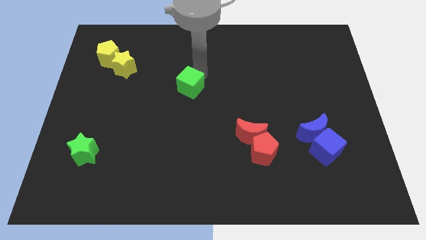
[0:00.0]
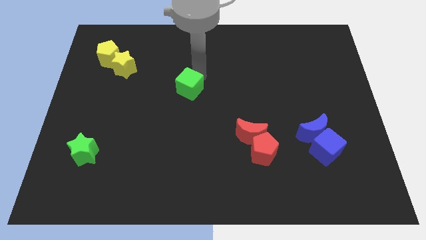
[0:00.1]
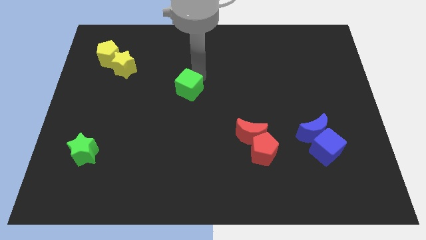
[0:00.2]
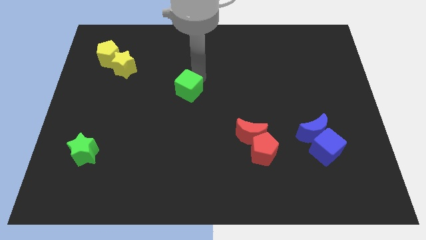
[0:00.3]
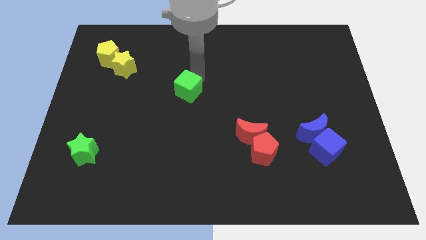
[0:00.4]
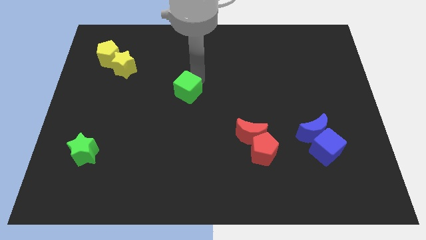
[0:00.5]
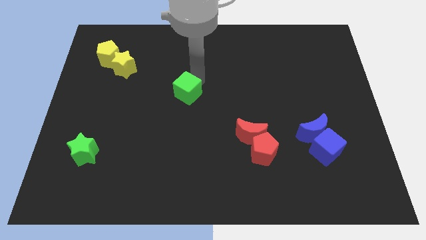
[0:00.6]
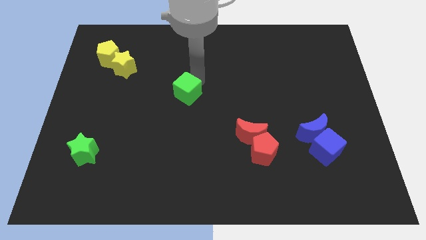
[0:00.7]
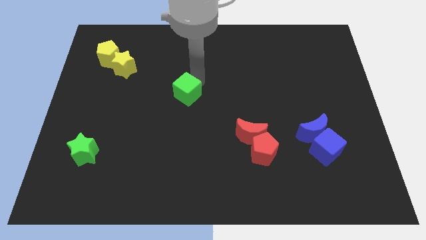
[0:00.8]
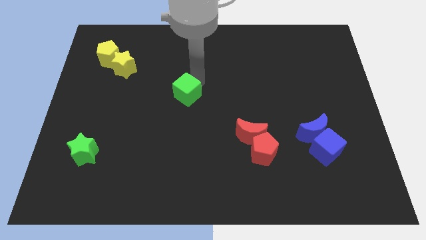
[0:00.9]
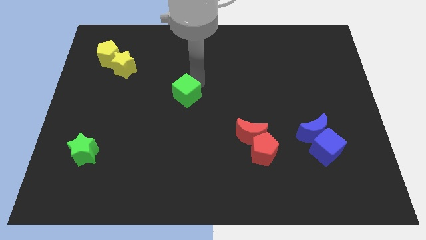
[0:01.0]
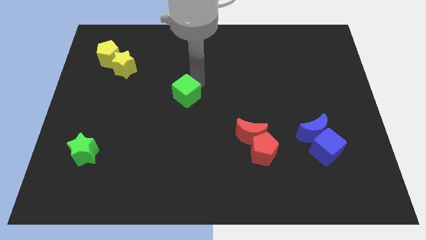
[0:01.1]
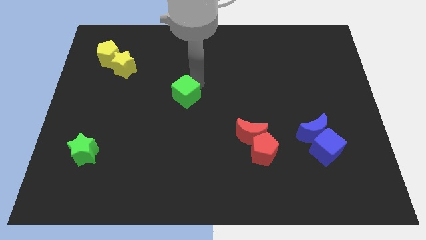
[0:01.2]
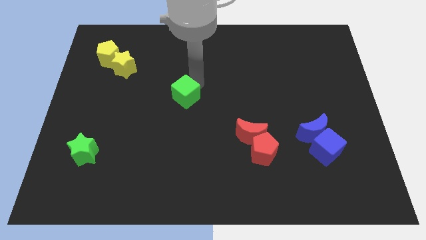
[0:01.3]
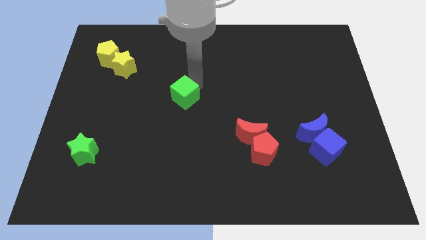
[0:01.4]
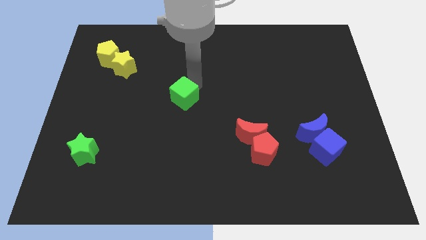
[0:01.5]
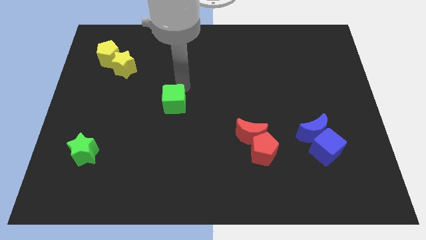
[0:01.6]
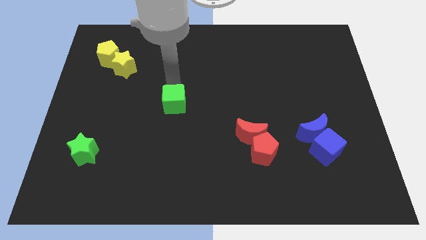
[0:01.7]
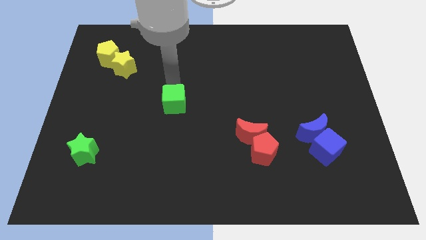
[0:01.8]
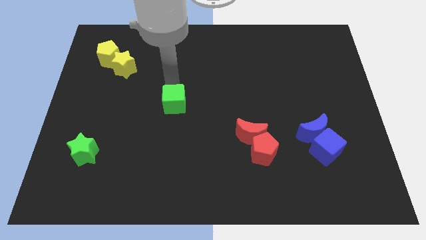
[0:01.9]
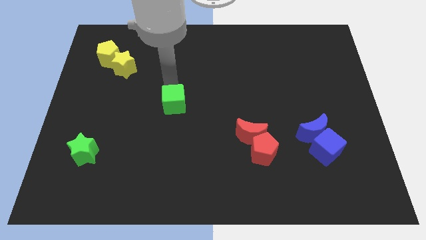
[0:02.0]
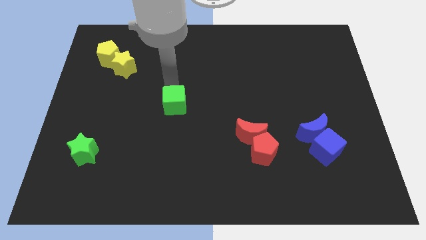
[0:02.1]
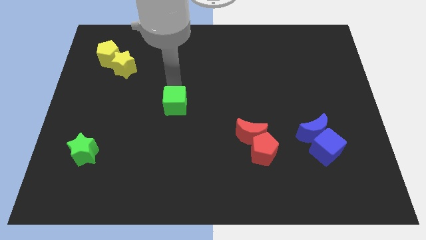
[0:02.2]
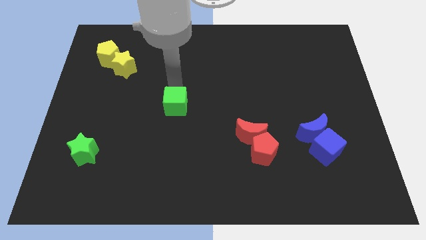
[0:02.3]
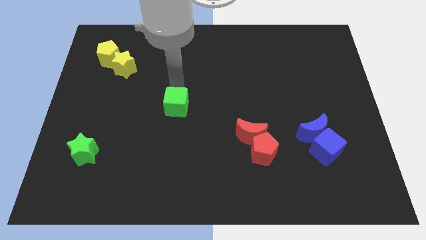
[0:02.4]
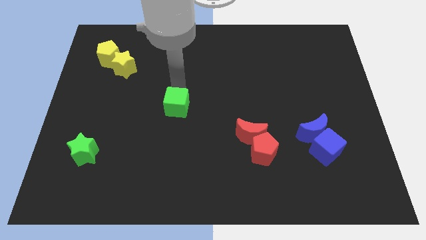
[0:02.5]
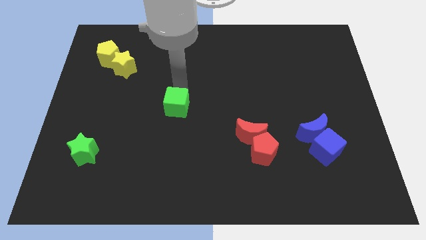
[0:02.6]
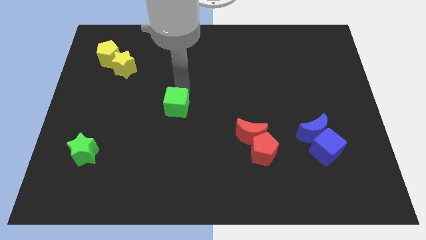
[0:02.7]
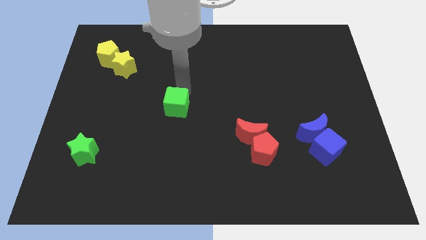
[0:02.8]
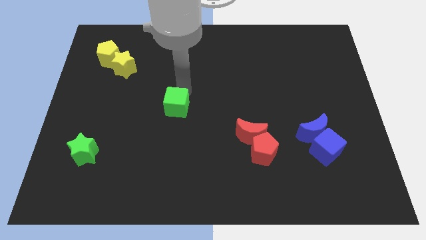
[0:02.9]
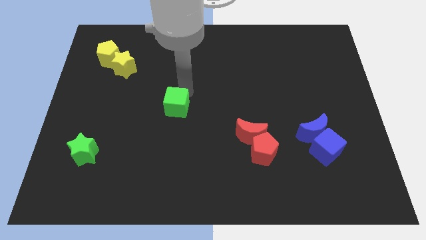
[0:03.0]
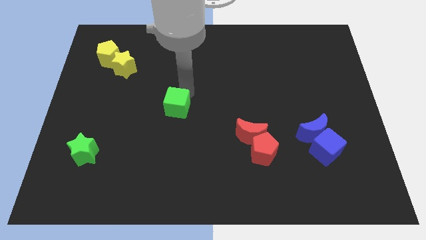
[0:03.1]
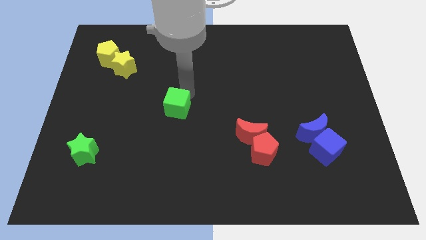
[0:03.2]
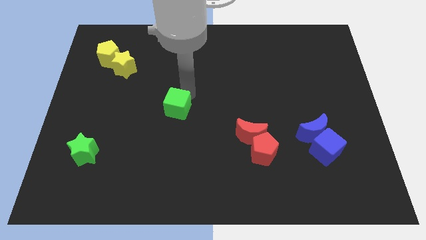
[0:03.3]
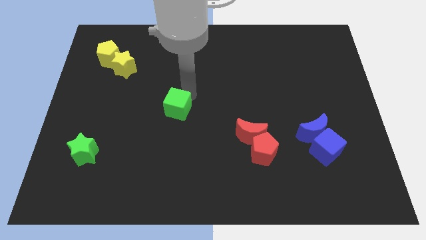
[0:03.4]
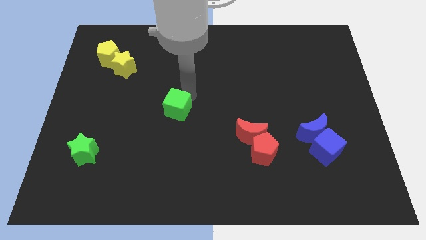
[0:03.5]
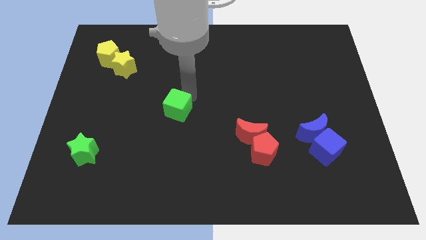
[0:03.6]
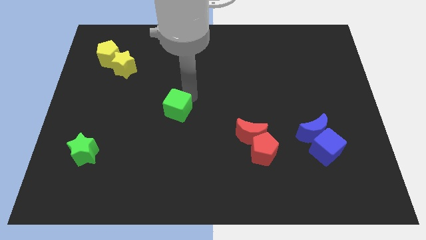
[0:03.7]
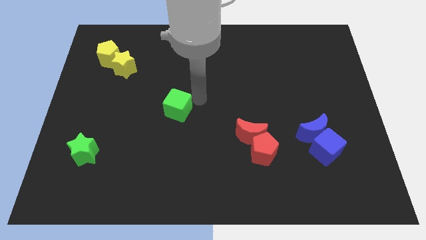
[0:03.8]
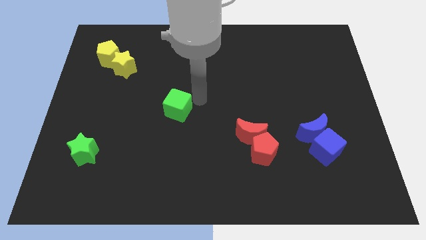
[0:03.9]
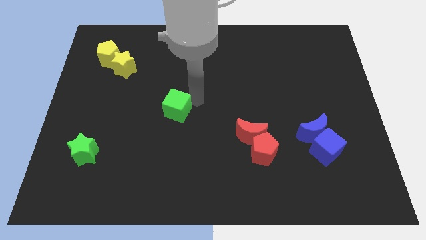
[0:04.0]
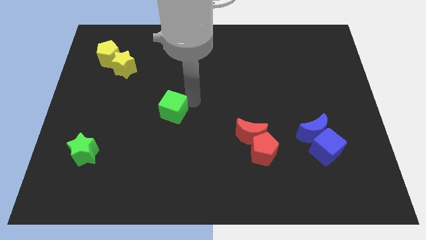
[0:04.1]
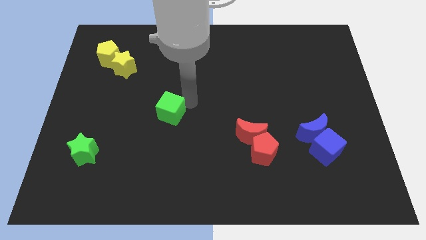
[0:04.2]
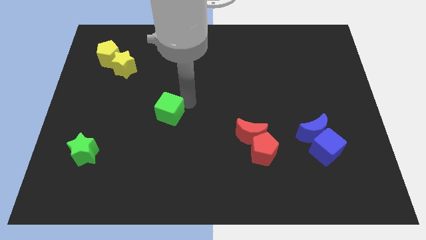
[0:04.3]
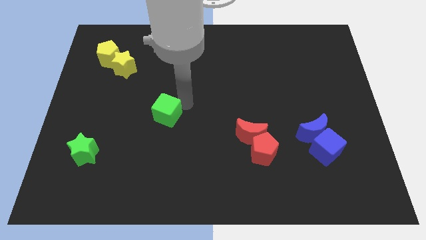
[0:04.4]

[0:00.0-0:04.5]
move the green cube towards the green star

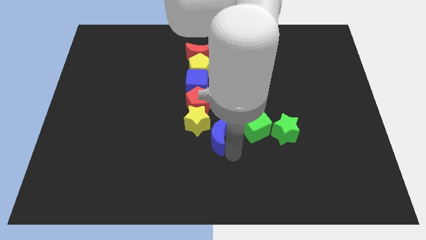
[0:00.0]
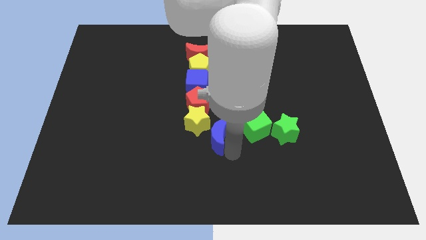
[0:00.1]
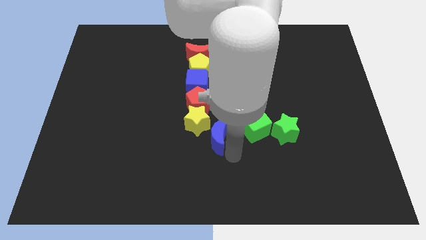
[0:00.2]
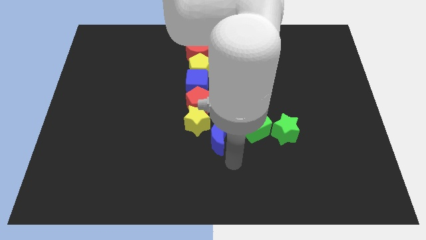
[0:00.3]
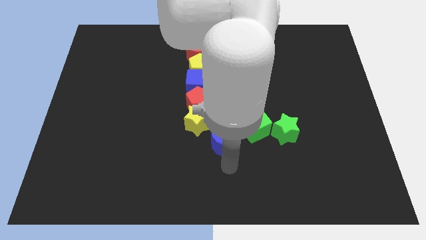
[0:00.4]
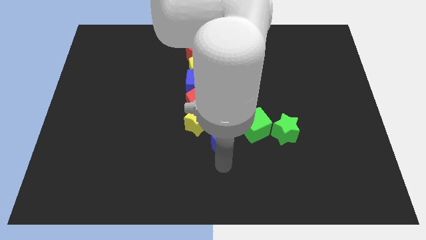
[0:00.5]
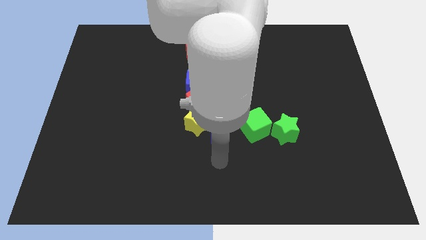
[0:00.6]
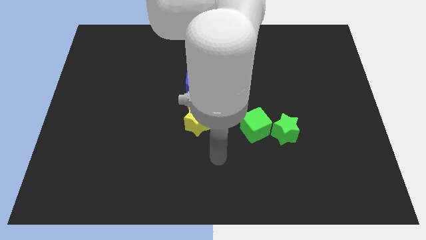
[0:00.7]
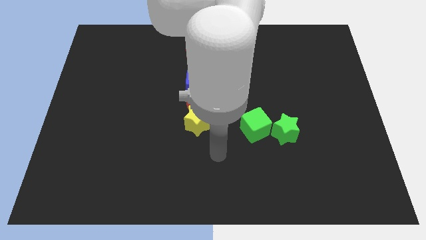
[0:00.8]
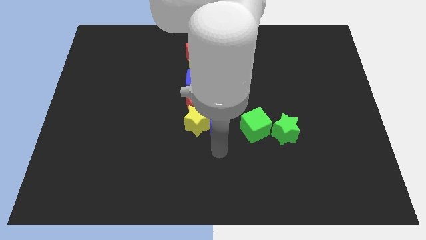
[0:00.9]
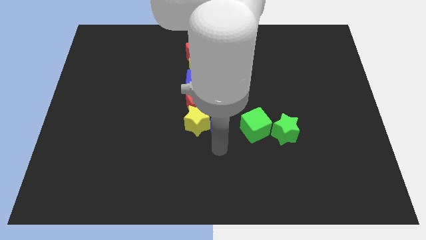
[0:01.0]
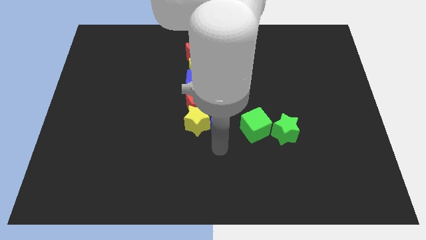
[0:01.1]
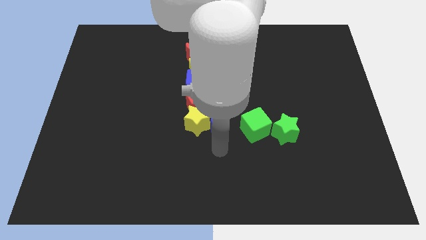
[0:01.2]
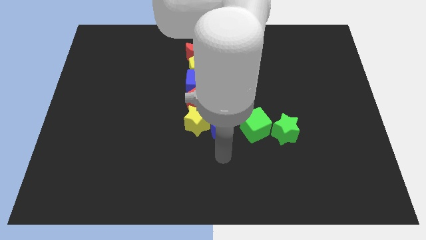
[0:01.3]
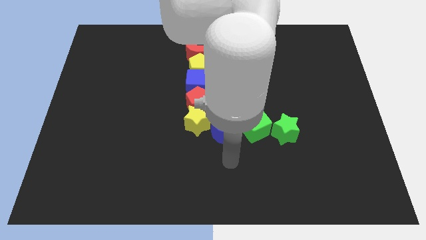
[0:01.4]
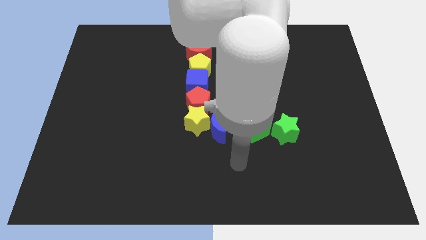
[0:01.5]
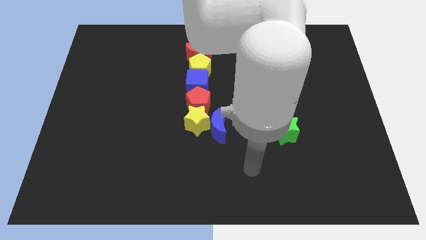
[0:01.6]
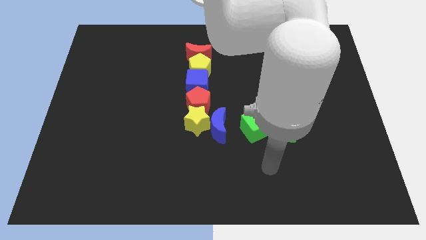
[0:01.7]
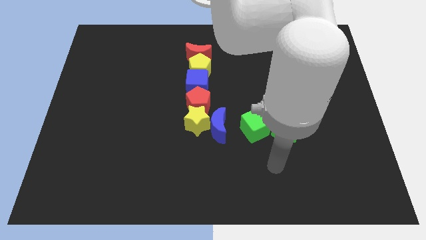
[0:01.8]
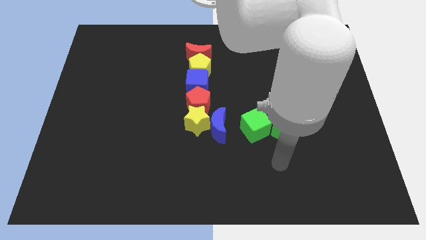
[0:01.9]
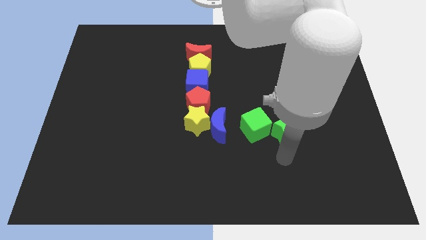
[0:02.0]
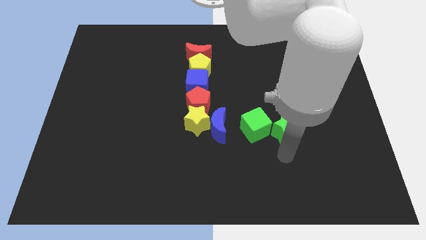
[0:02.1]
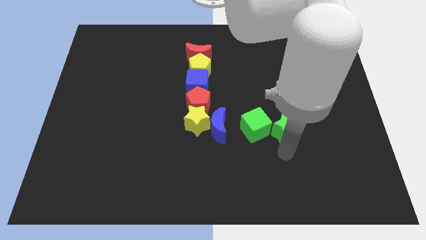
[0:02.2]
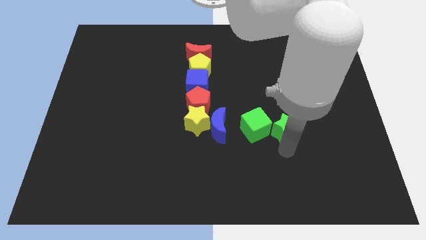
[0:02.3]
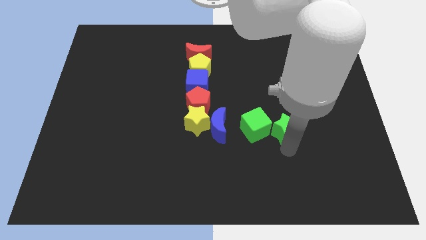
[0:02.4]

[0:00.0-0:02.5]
move the blue moon on the left side of the green blocks

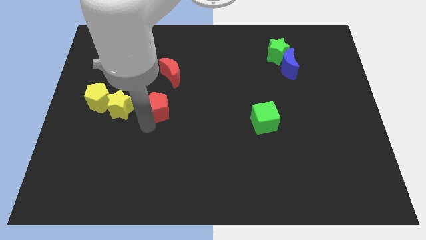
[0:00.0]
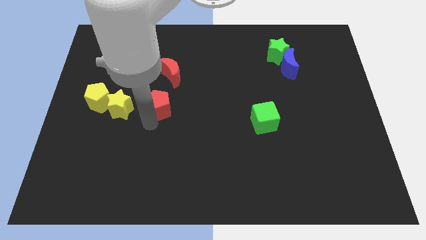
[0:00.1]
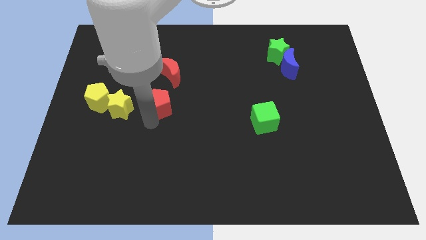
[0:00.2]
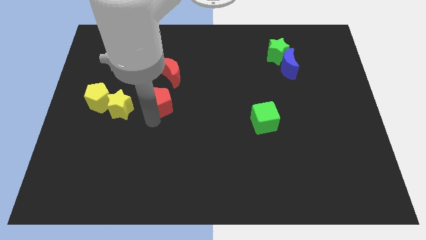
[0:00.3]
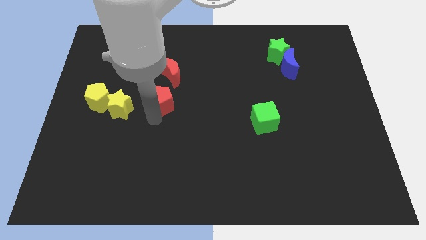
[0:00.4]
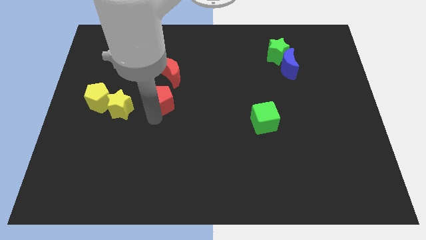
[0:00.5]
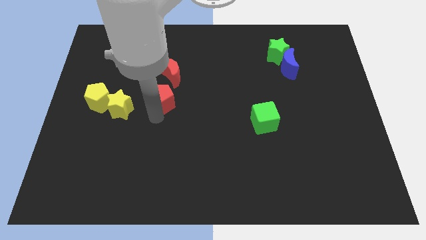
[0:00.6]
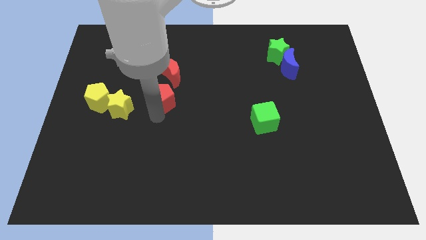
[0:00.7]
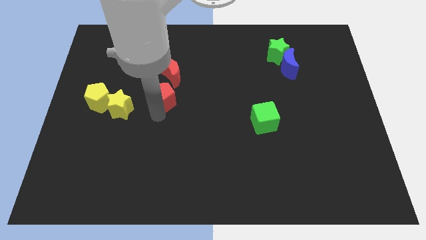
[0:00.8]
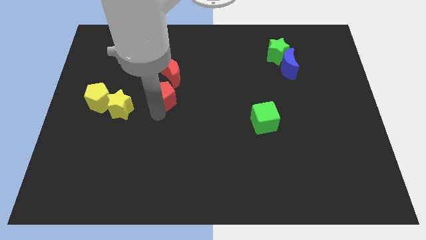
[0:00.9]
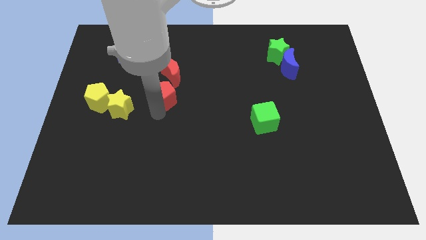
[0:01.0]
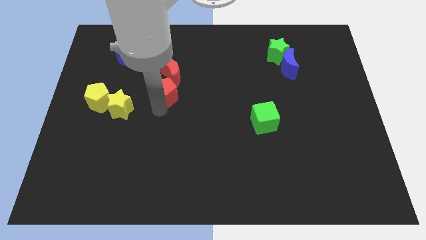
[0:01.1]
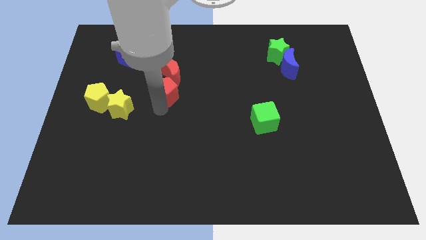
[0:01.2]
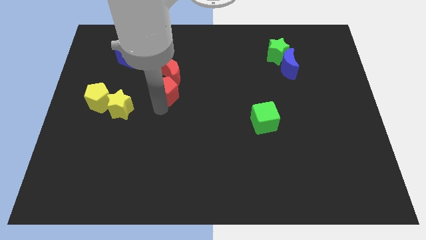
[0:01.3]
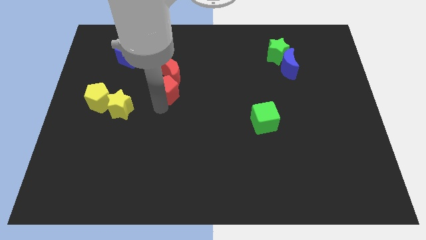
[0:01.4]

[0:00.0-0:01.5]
place red pentagon to the bottom of red moon

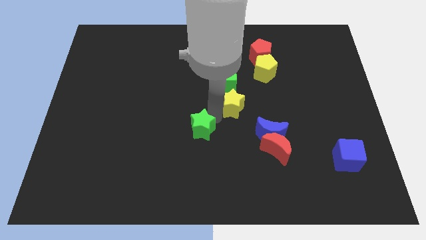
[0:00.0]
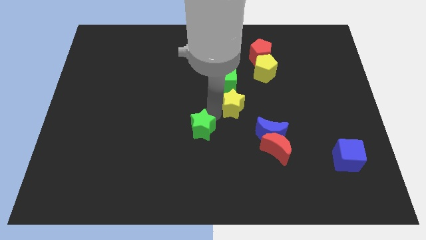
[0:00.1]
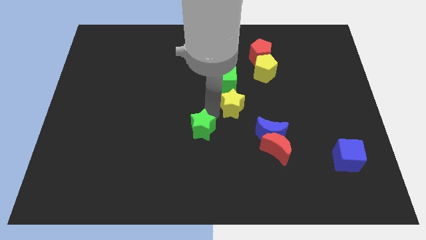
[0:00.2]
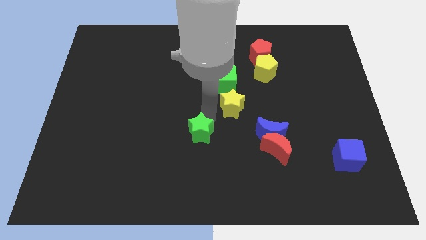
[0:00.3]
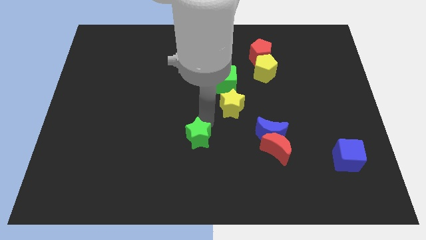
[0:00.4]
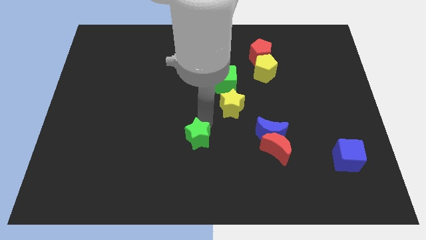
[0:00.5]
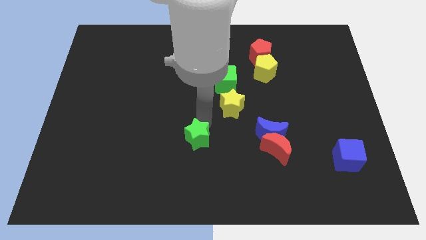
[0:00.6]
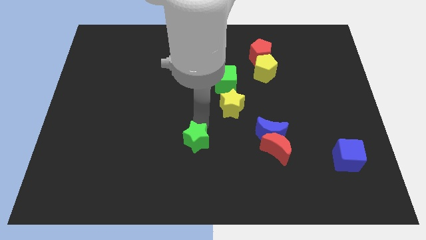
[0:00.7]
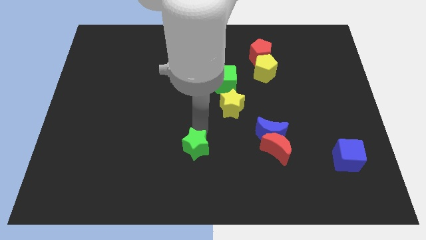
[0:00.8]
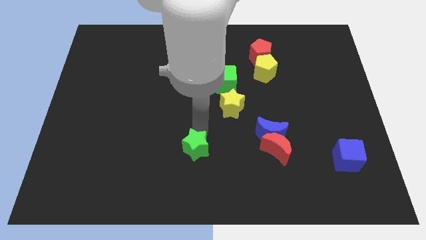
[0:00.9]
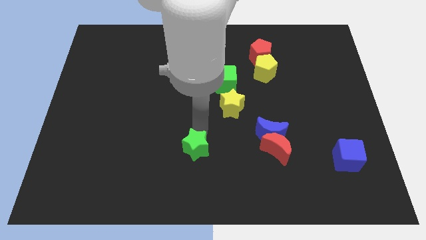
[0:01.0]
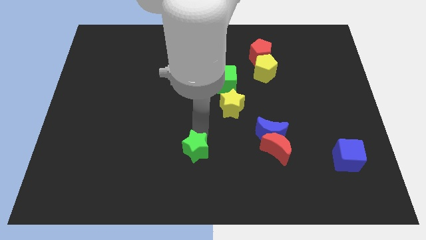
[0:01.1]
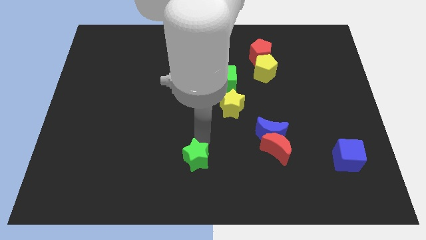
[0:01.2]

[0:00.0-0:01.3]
put the green star to the left side of the red crescent
